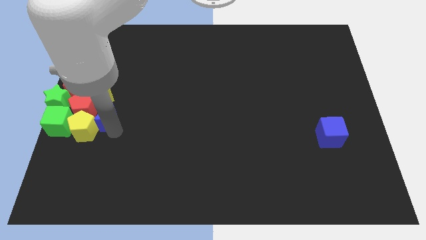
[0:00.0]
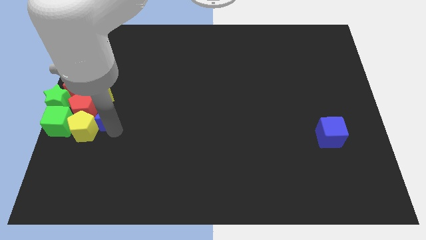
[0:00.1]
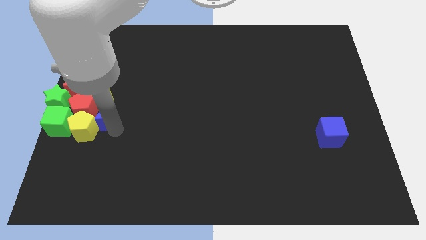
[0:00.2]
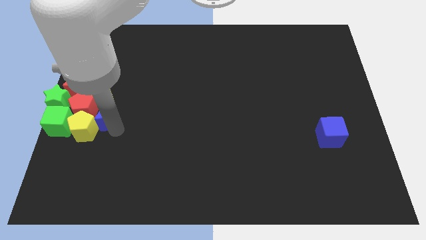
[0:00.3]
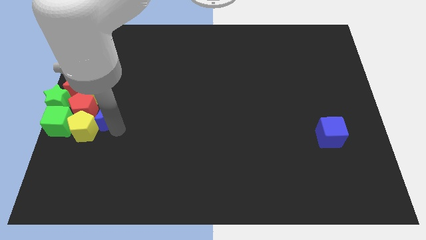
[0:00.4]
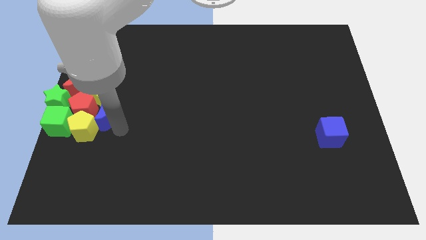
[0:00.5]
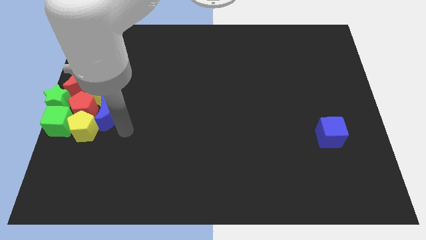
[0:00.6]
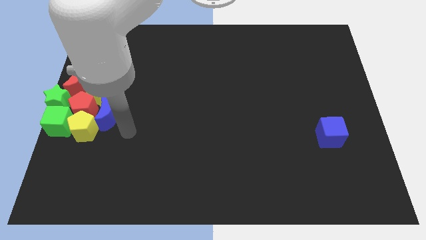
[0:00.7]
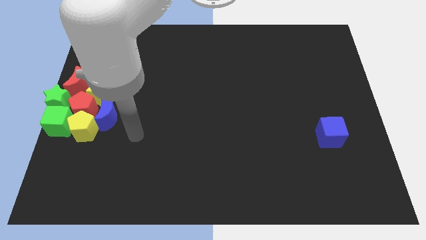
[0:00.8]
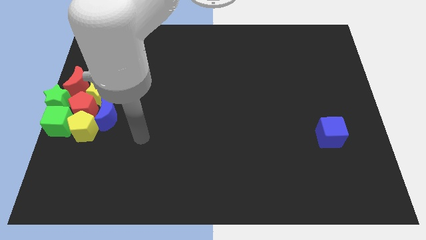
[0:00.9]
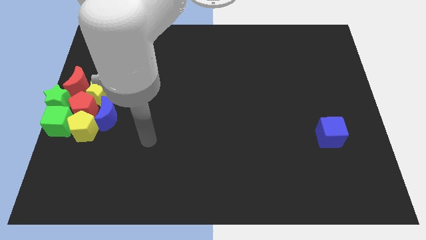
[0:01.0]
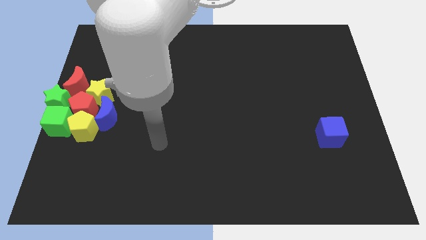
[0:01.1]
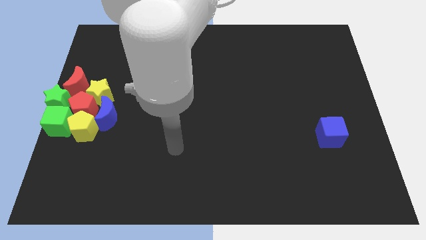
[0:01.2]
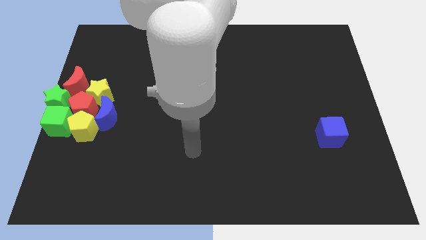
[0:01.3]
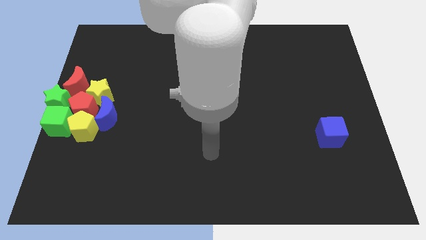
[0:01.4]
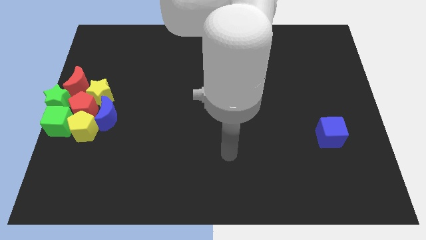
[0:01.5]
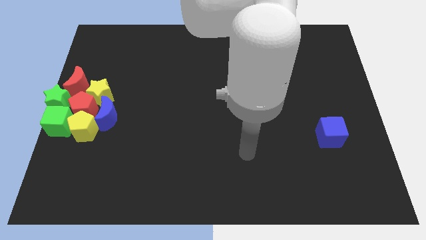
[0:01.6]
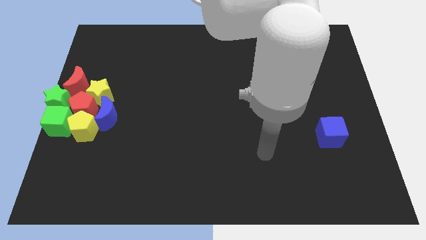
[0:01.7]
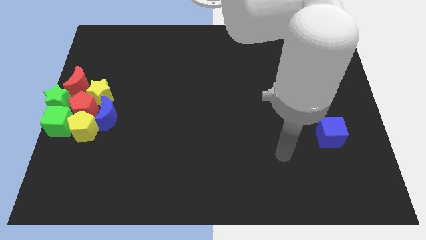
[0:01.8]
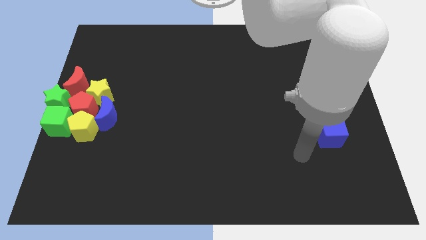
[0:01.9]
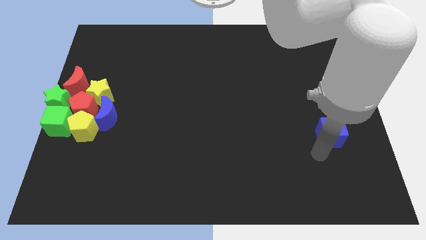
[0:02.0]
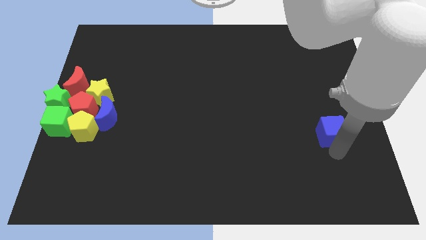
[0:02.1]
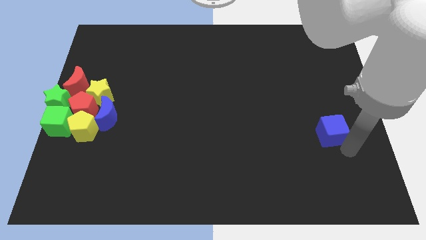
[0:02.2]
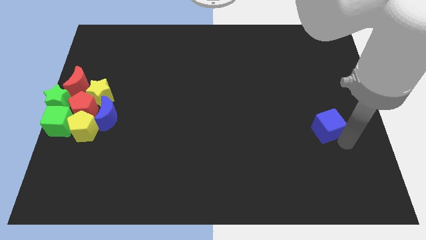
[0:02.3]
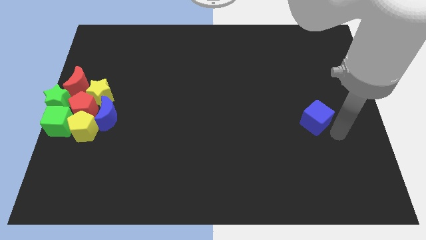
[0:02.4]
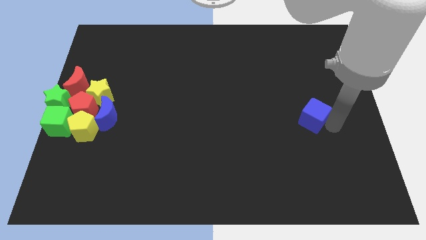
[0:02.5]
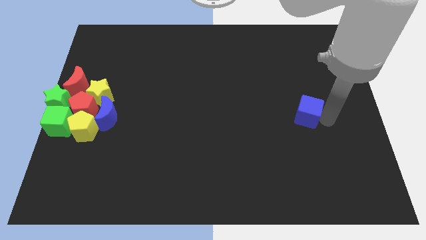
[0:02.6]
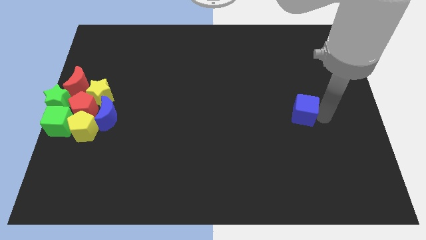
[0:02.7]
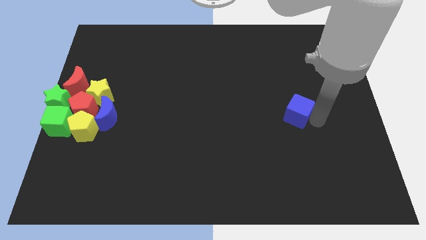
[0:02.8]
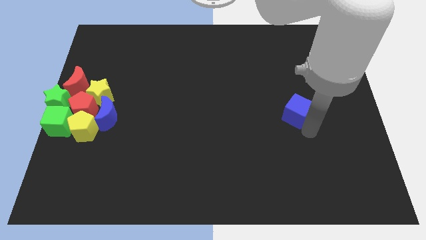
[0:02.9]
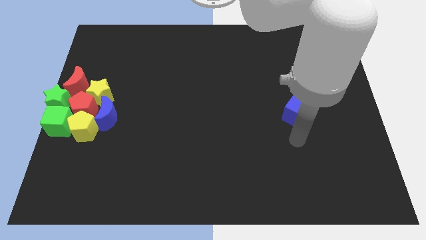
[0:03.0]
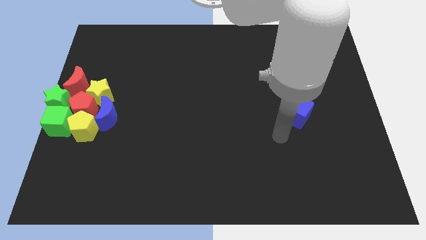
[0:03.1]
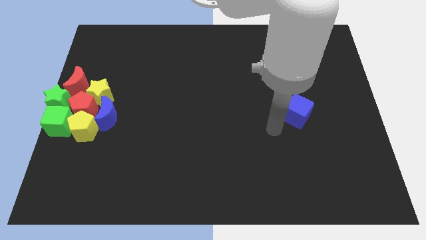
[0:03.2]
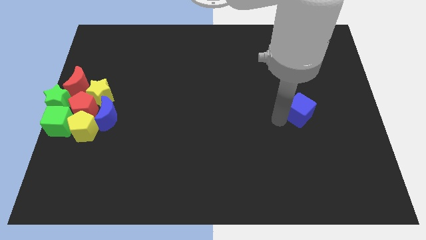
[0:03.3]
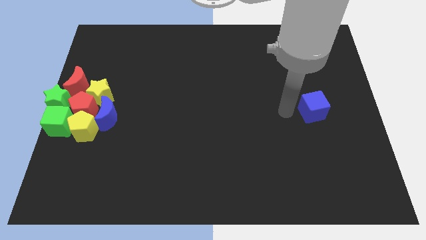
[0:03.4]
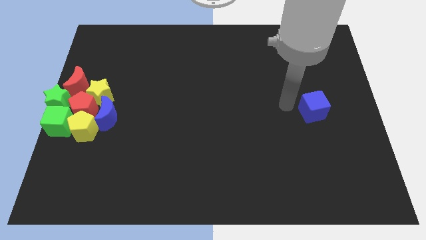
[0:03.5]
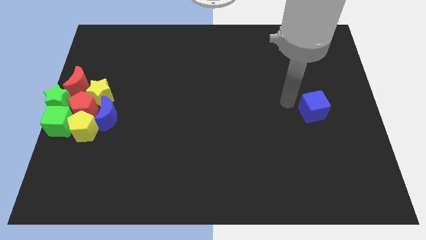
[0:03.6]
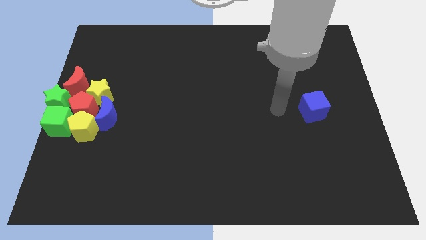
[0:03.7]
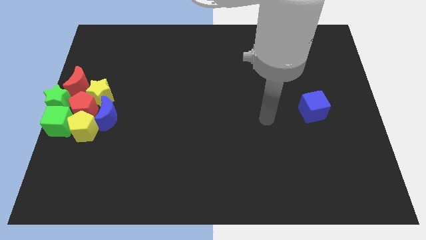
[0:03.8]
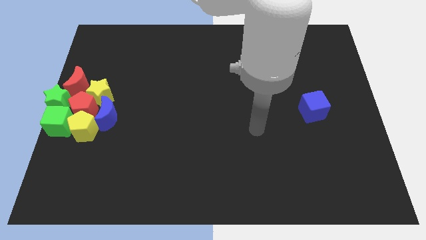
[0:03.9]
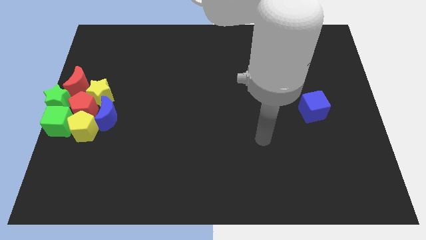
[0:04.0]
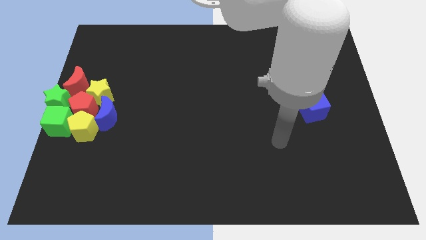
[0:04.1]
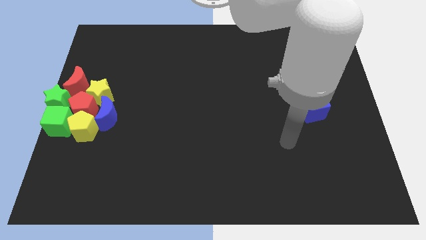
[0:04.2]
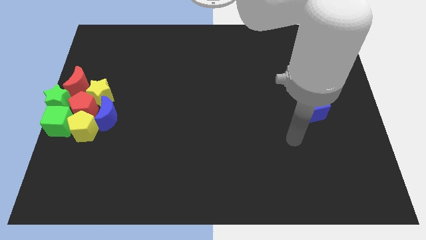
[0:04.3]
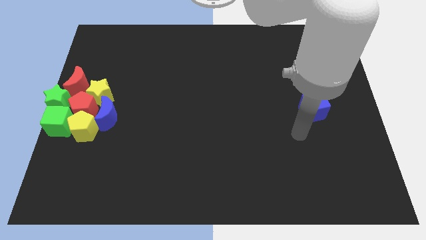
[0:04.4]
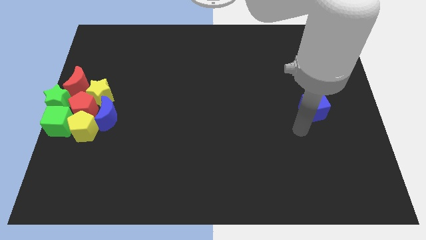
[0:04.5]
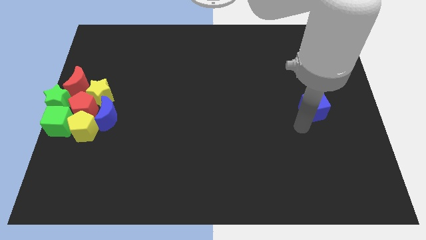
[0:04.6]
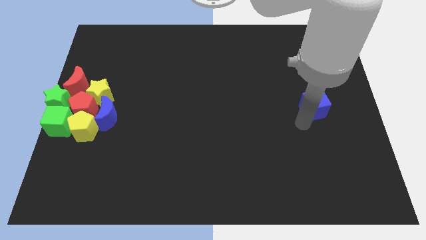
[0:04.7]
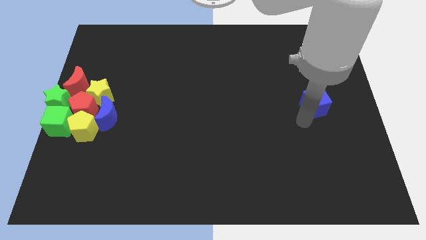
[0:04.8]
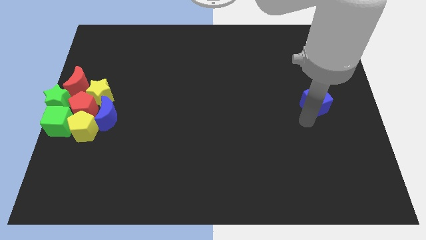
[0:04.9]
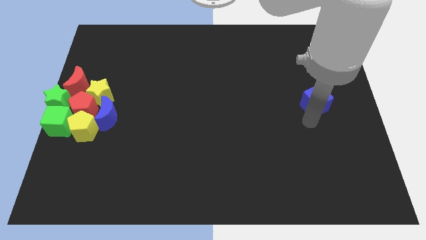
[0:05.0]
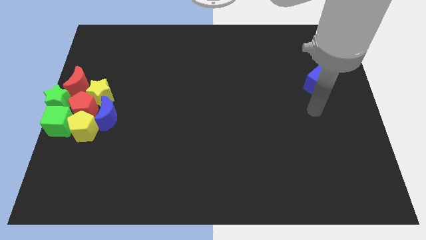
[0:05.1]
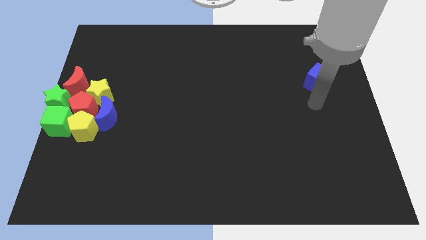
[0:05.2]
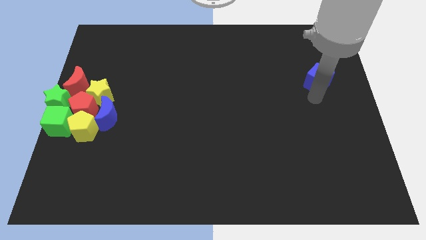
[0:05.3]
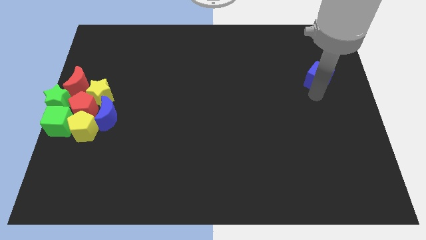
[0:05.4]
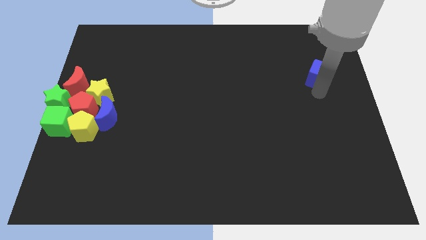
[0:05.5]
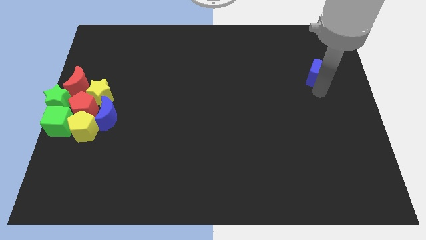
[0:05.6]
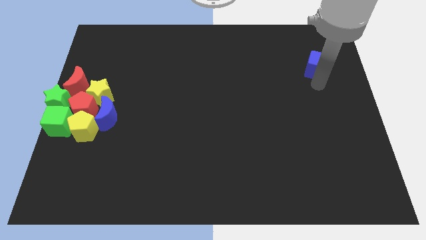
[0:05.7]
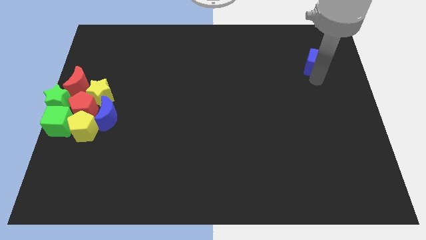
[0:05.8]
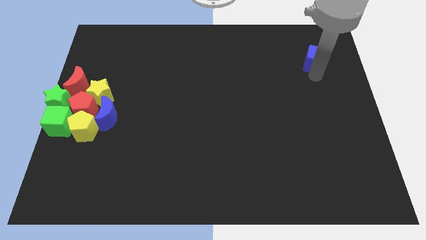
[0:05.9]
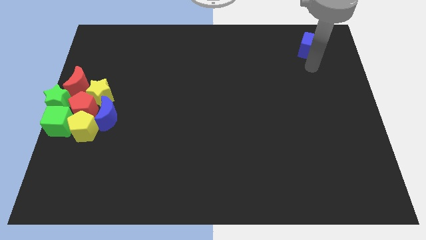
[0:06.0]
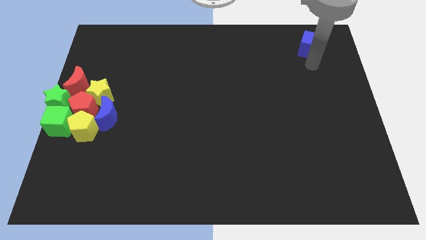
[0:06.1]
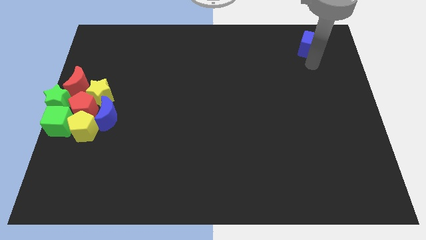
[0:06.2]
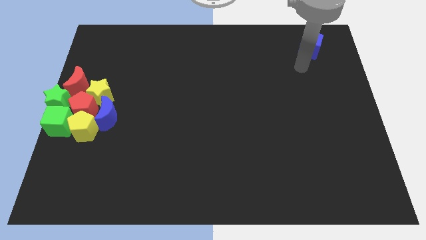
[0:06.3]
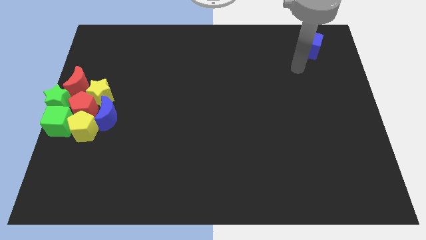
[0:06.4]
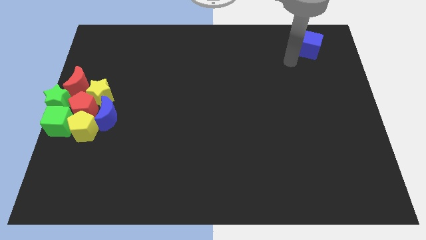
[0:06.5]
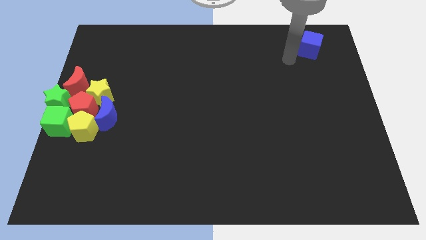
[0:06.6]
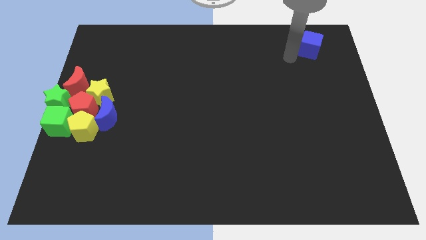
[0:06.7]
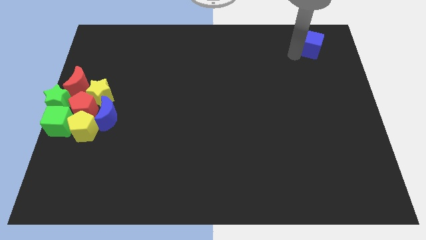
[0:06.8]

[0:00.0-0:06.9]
push the blue cube towards the top right corner of the board

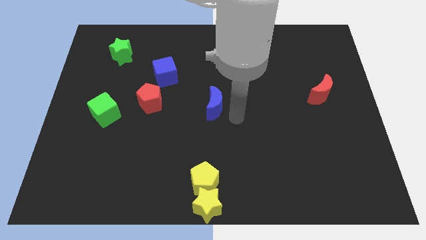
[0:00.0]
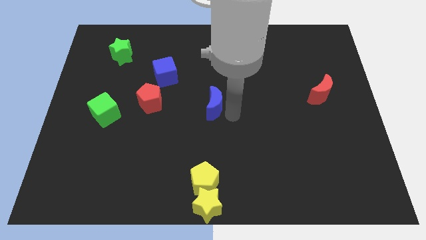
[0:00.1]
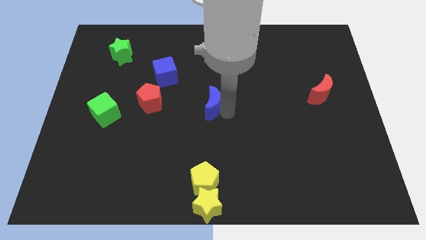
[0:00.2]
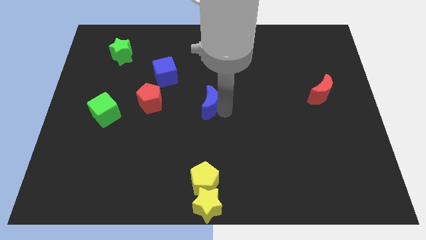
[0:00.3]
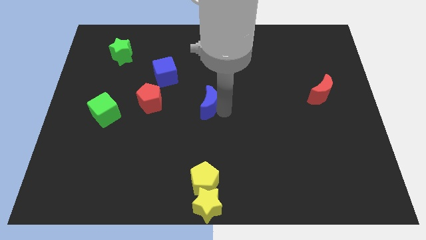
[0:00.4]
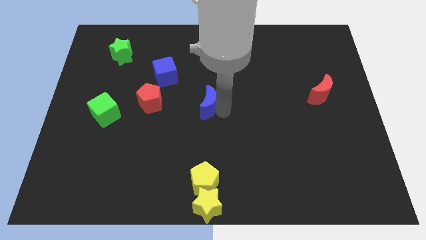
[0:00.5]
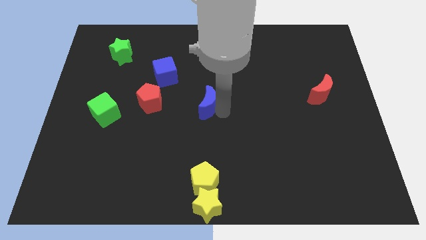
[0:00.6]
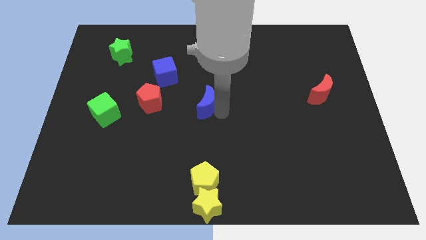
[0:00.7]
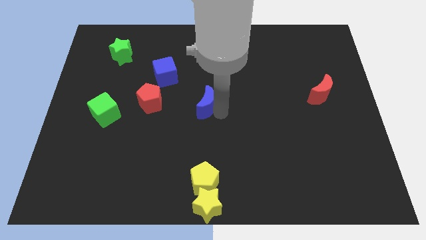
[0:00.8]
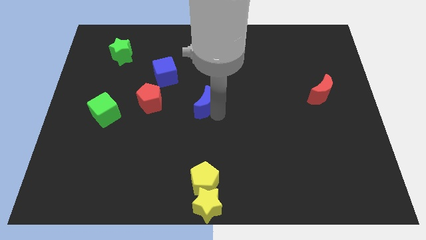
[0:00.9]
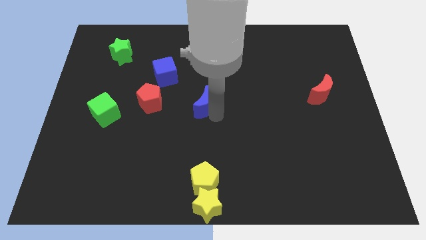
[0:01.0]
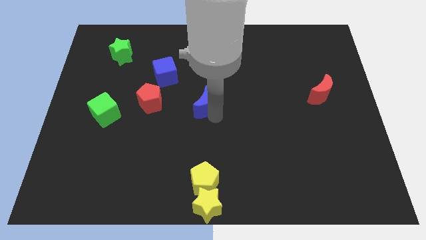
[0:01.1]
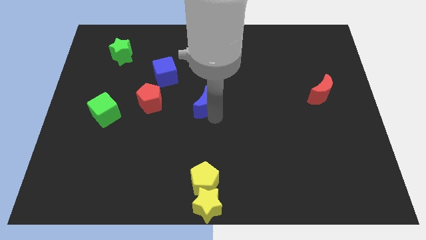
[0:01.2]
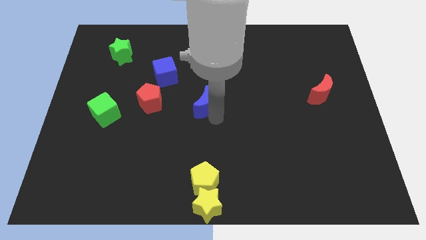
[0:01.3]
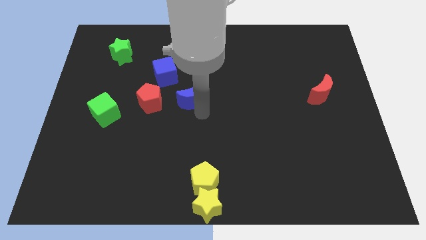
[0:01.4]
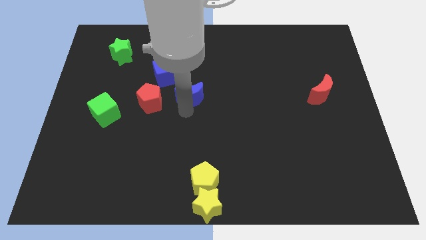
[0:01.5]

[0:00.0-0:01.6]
move away blue moon from the center of the board

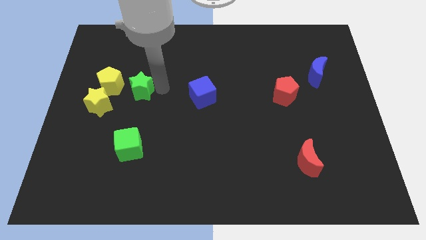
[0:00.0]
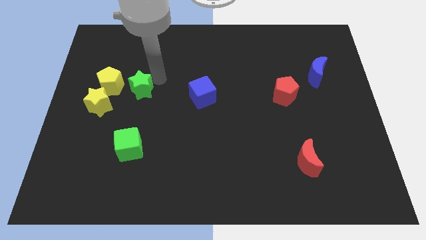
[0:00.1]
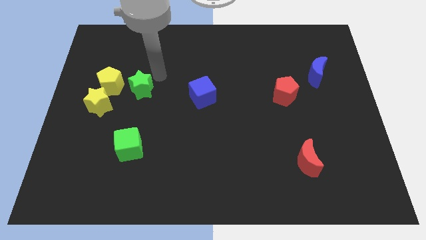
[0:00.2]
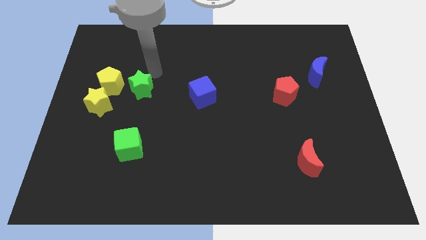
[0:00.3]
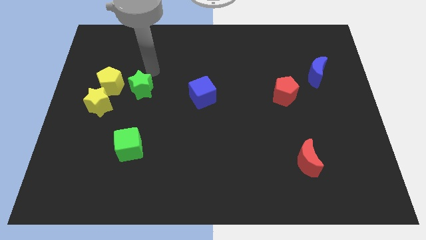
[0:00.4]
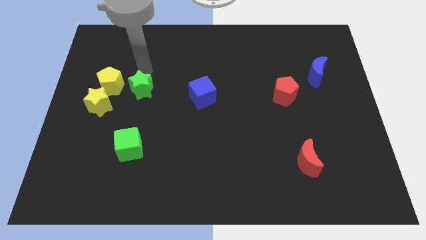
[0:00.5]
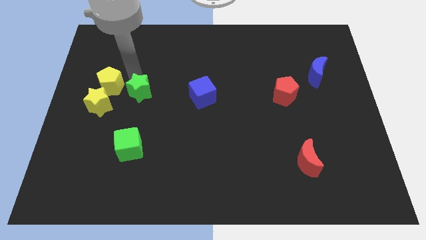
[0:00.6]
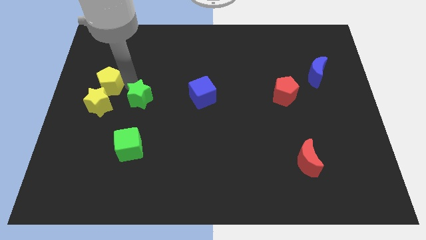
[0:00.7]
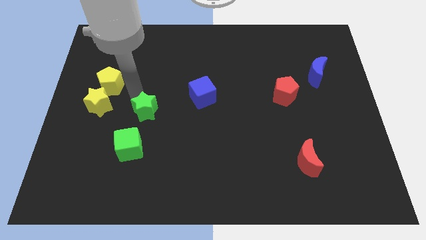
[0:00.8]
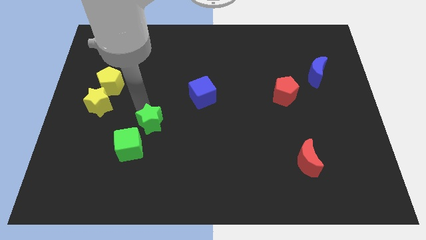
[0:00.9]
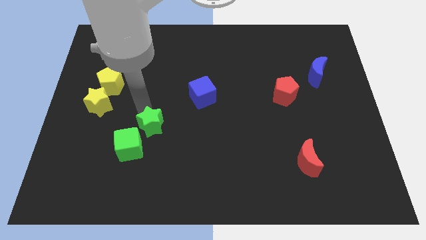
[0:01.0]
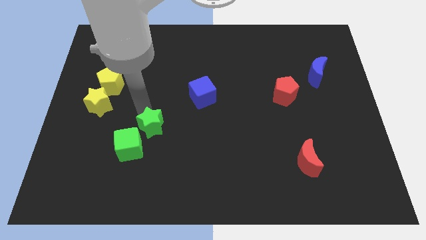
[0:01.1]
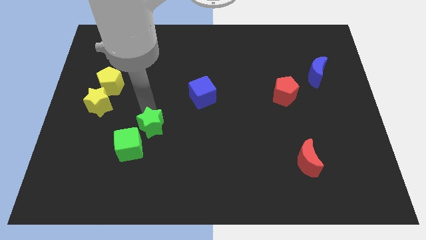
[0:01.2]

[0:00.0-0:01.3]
push the green star towards the green cube
